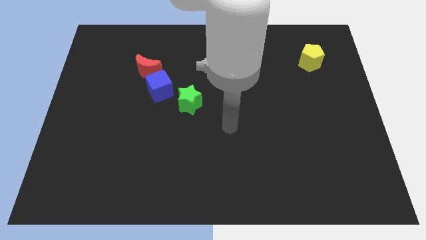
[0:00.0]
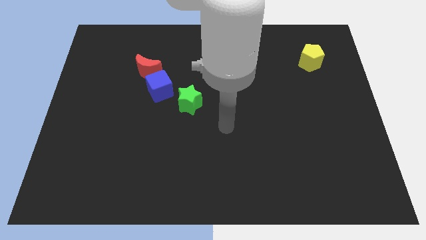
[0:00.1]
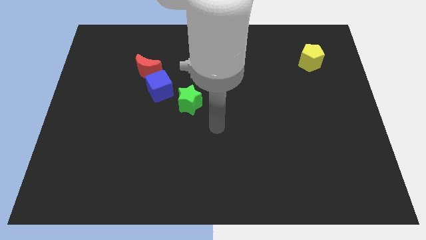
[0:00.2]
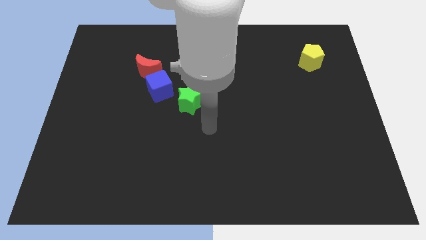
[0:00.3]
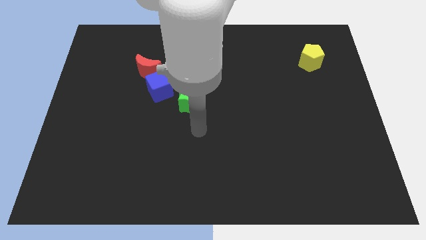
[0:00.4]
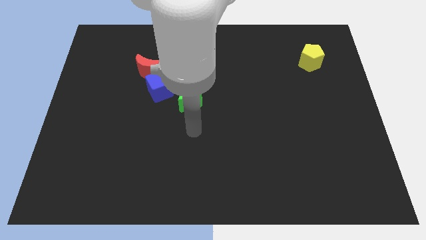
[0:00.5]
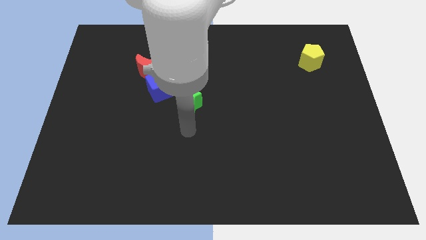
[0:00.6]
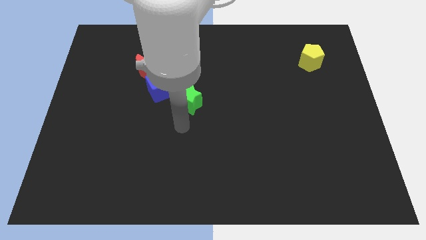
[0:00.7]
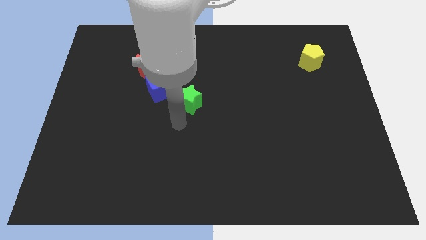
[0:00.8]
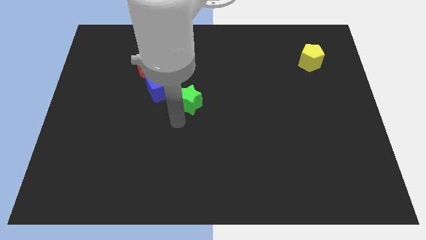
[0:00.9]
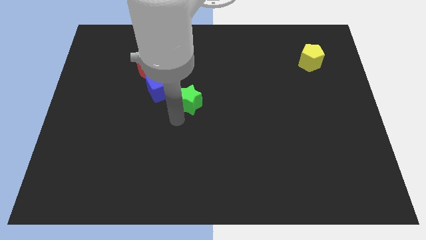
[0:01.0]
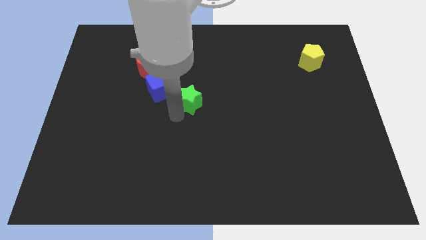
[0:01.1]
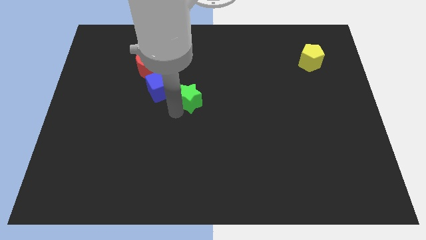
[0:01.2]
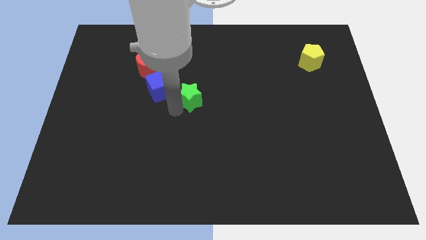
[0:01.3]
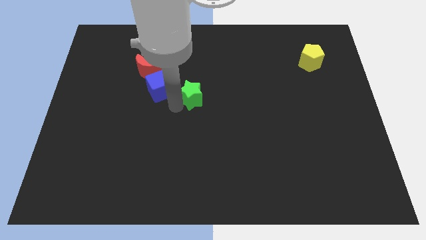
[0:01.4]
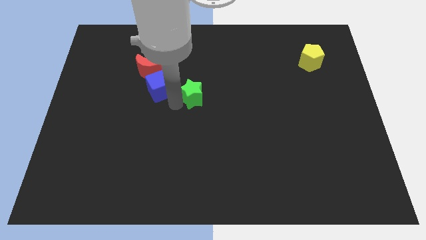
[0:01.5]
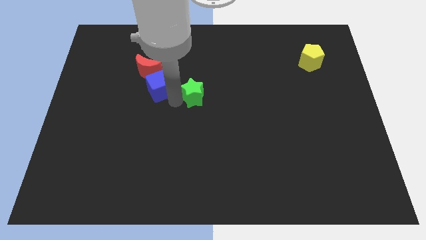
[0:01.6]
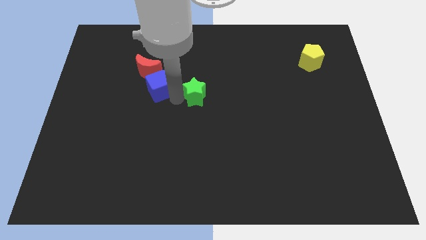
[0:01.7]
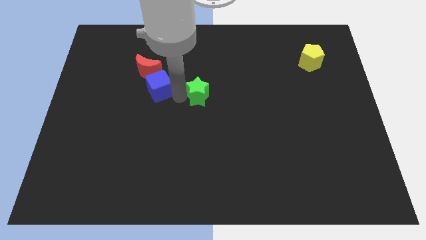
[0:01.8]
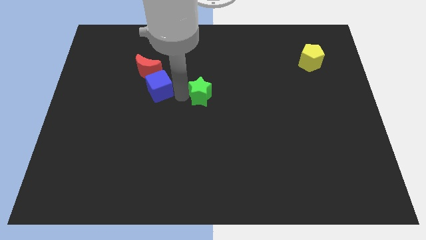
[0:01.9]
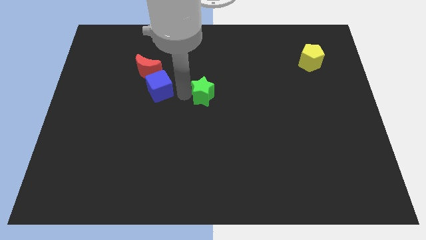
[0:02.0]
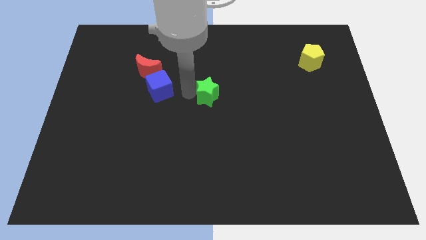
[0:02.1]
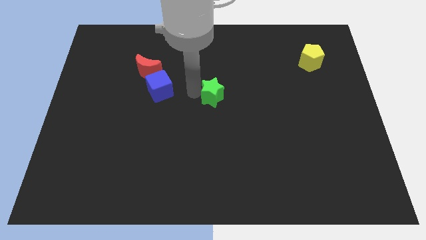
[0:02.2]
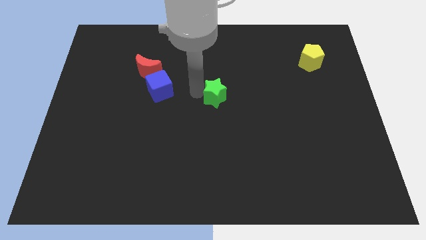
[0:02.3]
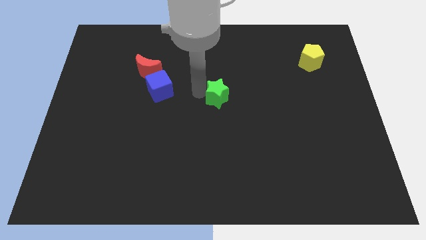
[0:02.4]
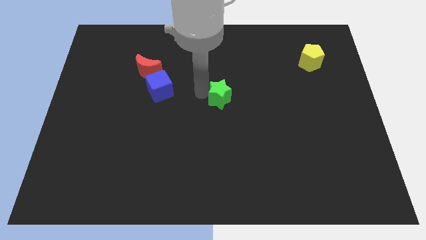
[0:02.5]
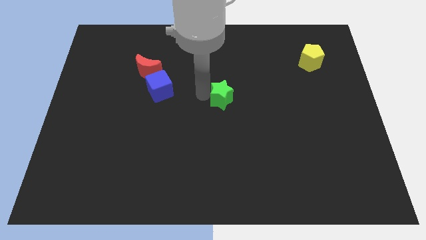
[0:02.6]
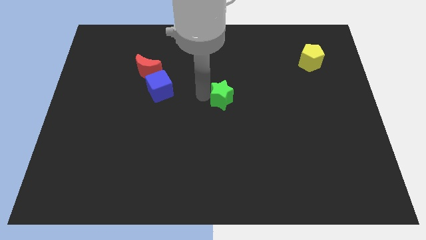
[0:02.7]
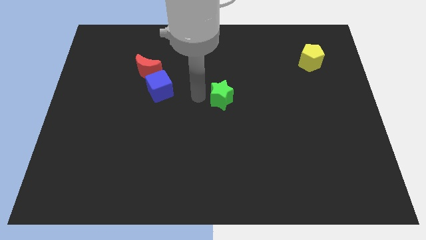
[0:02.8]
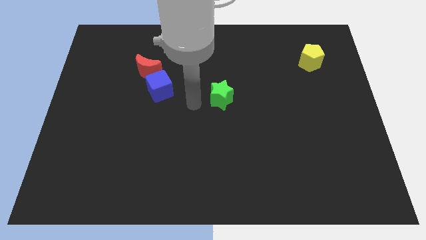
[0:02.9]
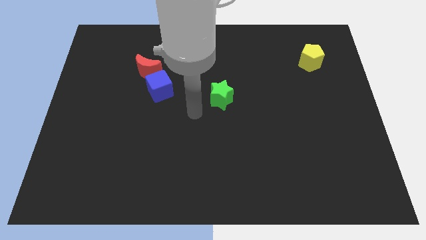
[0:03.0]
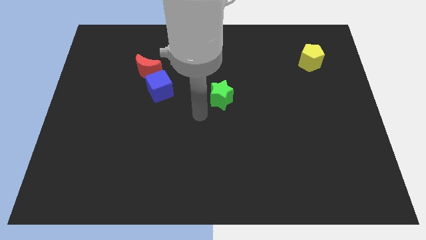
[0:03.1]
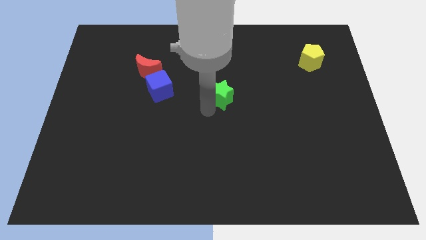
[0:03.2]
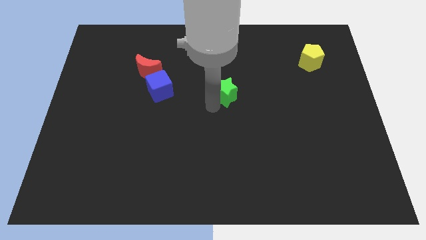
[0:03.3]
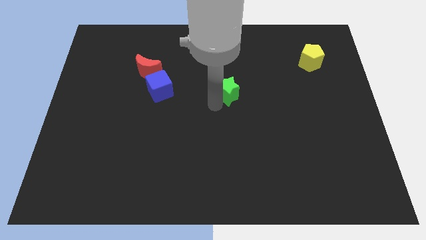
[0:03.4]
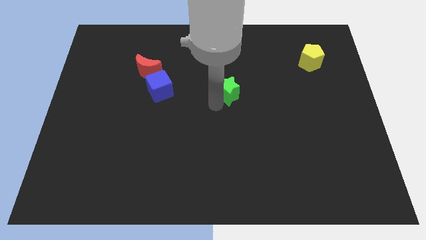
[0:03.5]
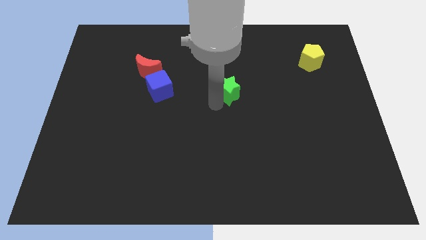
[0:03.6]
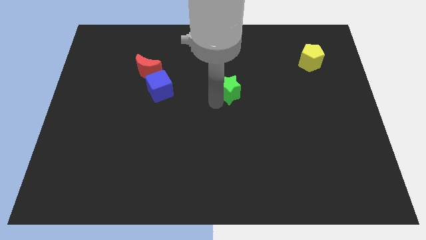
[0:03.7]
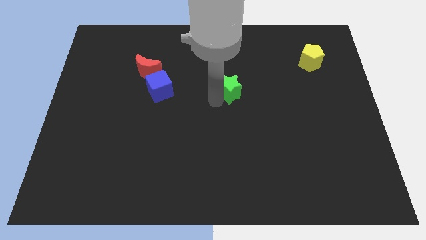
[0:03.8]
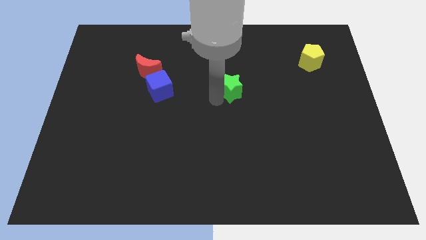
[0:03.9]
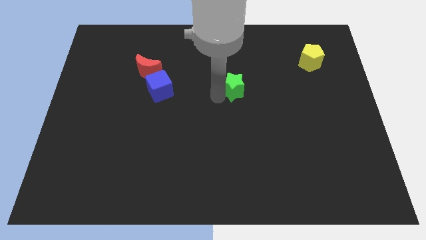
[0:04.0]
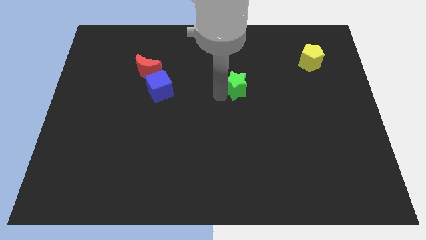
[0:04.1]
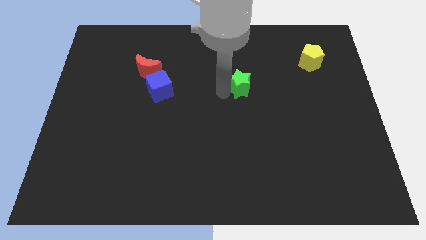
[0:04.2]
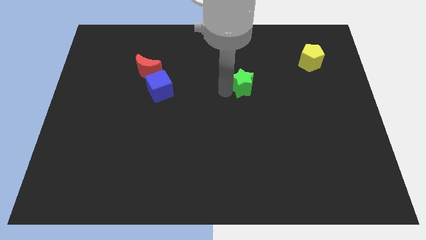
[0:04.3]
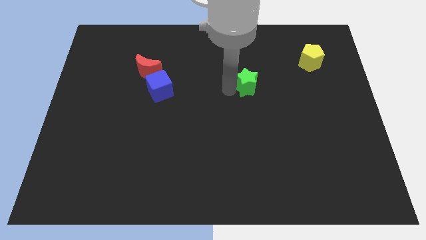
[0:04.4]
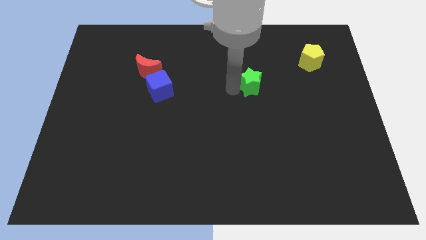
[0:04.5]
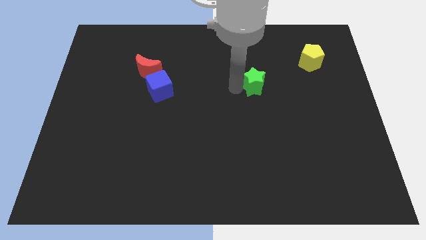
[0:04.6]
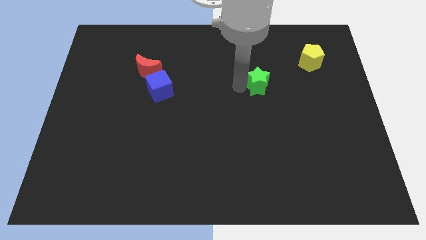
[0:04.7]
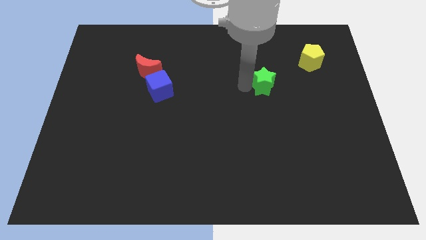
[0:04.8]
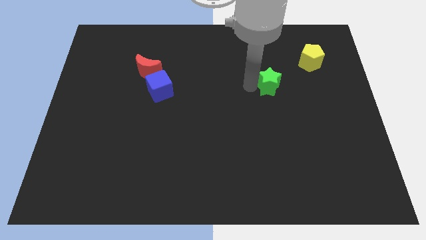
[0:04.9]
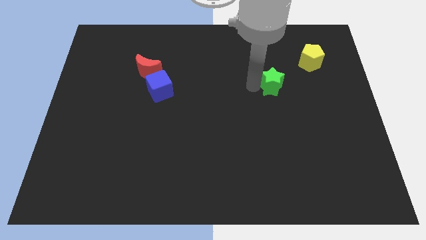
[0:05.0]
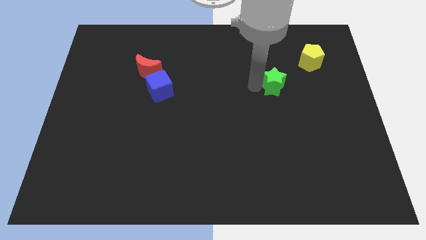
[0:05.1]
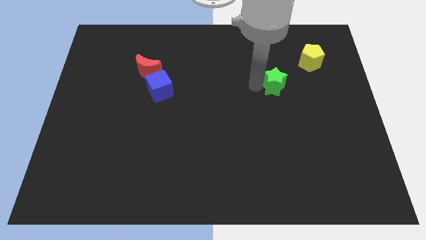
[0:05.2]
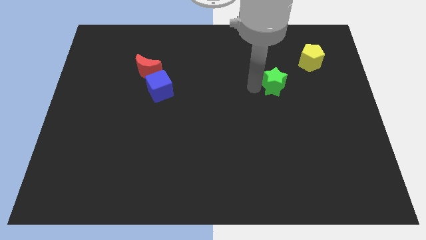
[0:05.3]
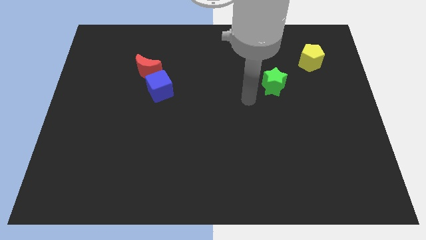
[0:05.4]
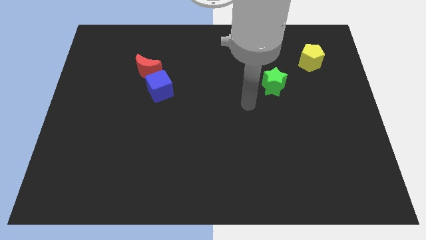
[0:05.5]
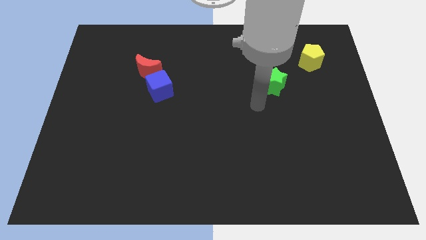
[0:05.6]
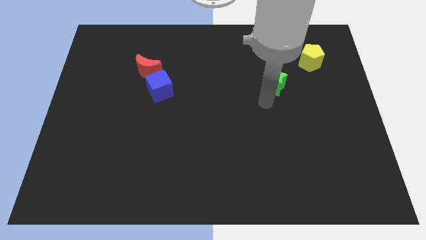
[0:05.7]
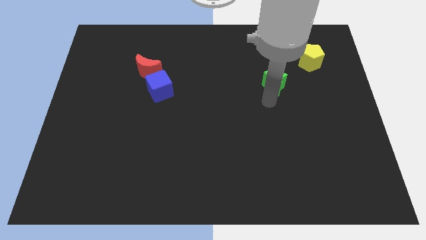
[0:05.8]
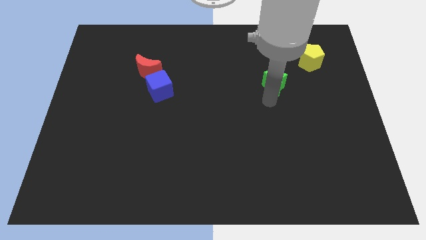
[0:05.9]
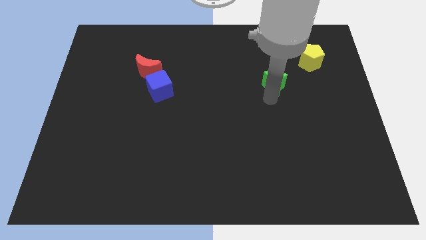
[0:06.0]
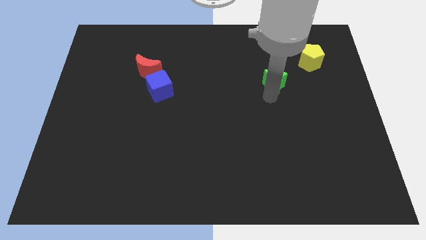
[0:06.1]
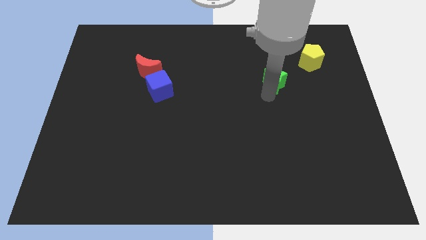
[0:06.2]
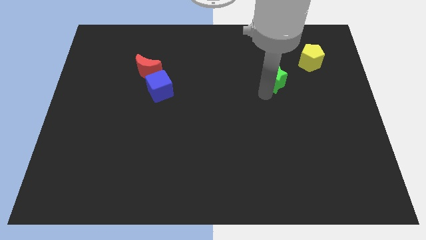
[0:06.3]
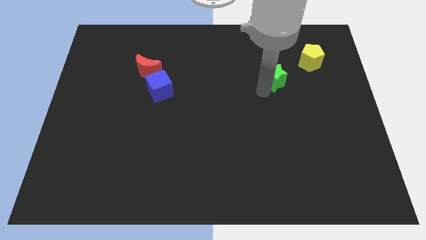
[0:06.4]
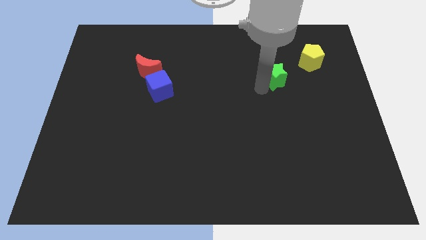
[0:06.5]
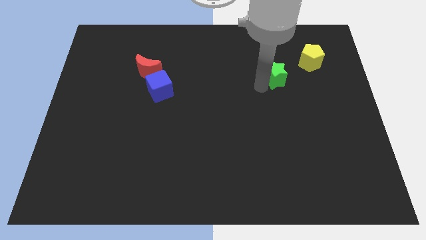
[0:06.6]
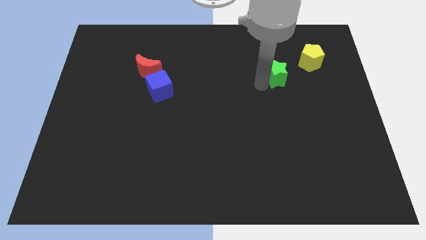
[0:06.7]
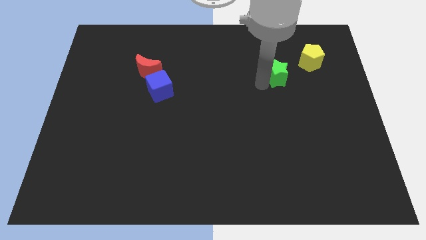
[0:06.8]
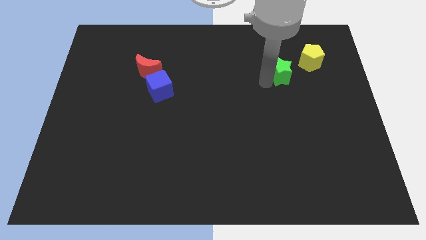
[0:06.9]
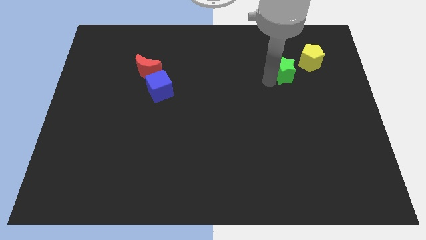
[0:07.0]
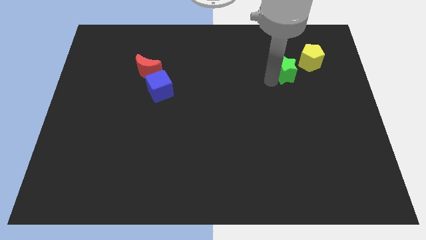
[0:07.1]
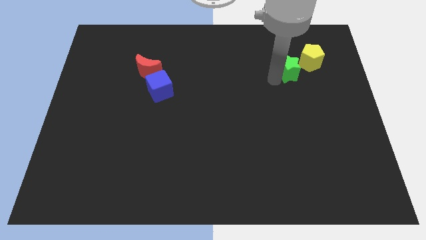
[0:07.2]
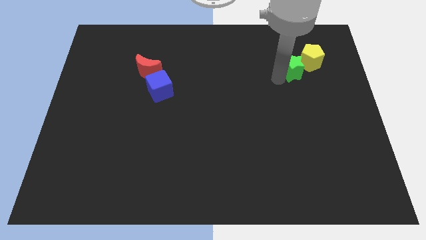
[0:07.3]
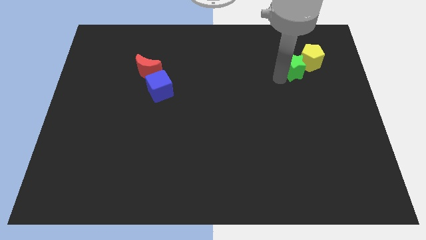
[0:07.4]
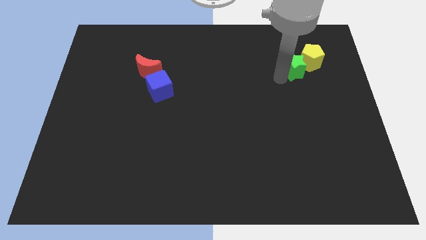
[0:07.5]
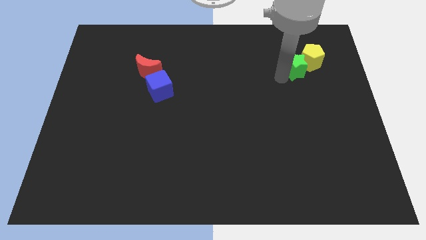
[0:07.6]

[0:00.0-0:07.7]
move the star to the yellow block

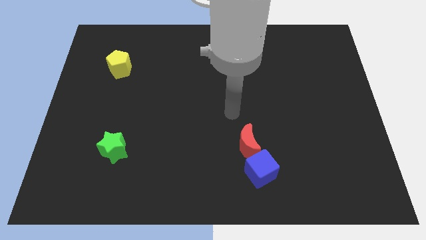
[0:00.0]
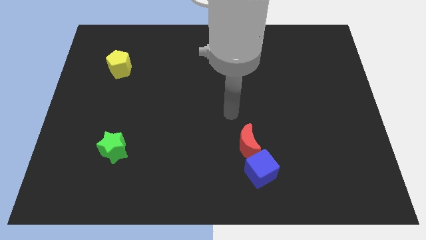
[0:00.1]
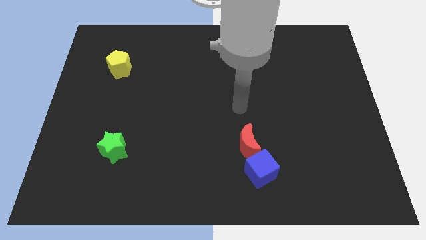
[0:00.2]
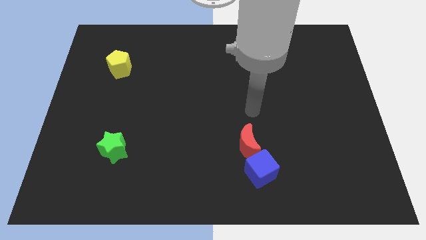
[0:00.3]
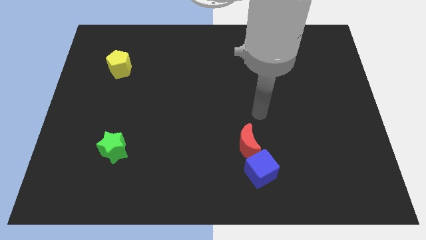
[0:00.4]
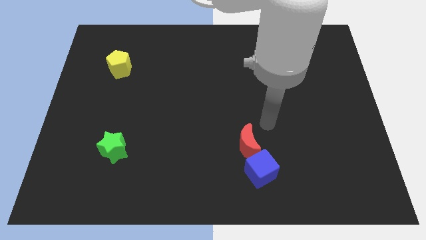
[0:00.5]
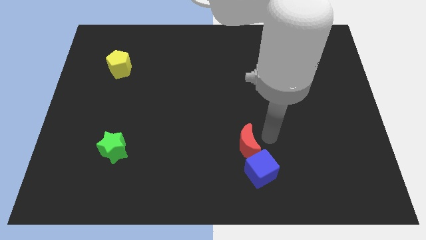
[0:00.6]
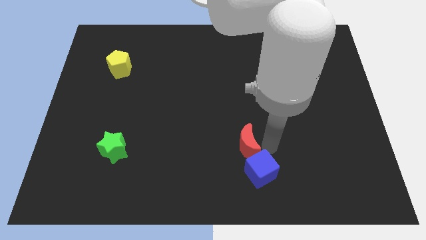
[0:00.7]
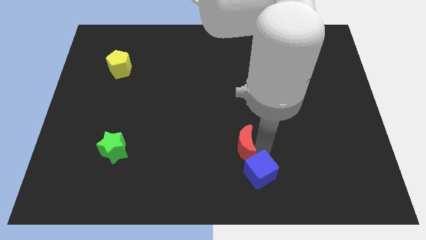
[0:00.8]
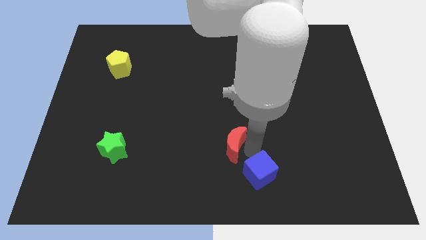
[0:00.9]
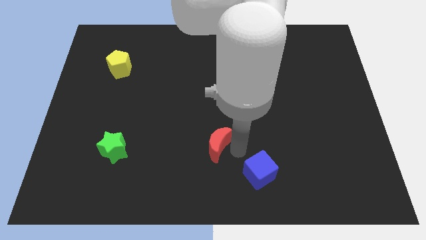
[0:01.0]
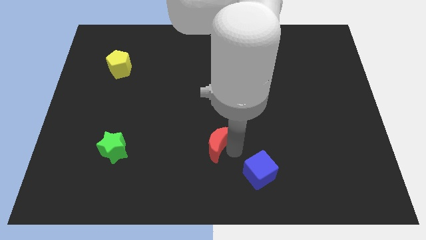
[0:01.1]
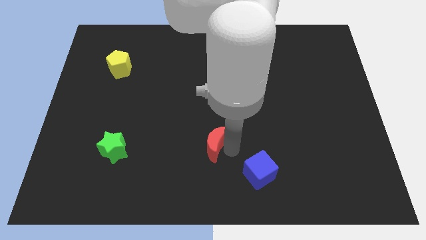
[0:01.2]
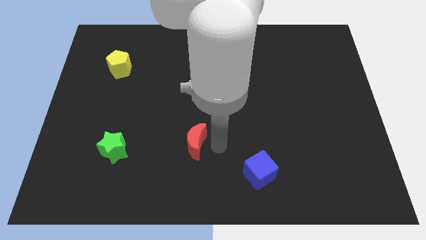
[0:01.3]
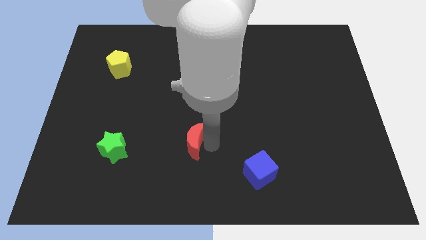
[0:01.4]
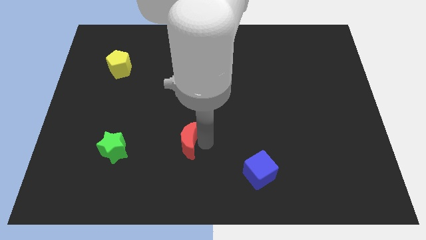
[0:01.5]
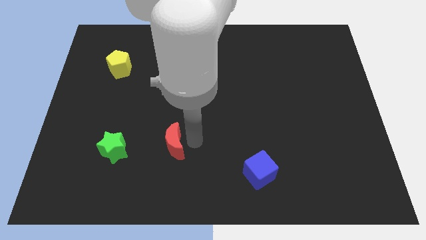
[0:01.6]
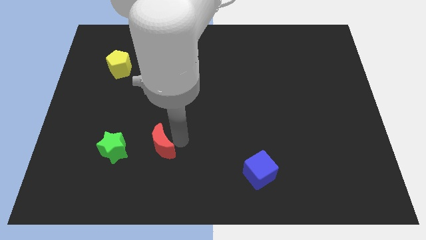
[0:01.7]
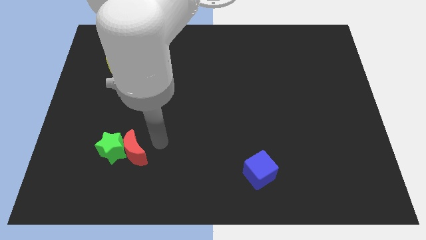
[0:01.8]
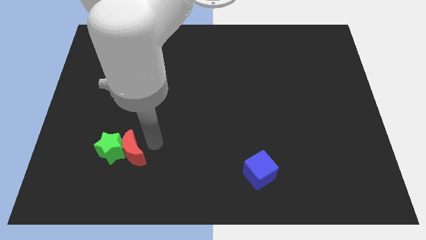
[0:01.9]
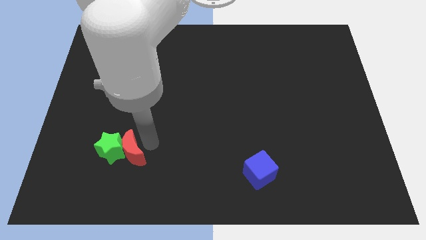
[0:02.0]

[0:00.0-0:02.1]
slide the red moon to the star
